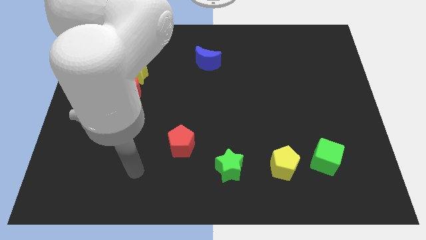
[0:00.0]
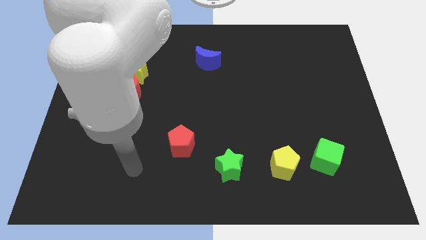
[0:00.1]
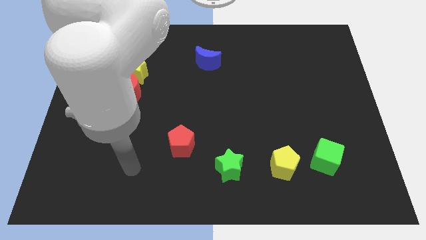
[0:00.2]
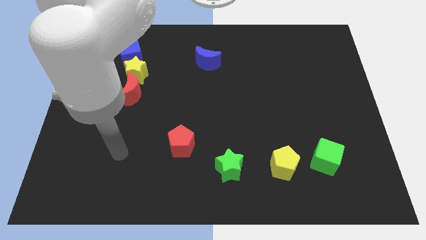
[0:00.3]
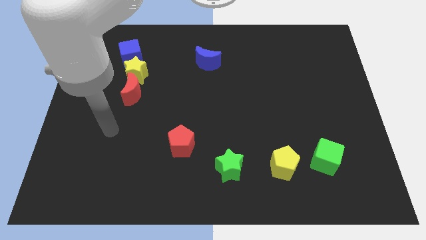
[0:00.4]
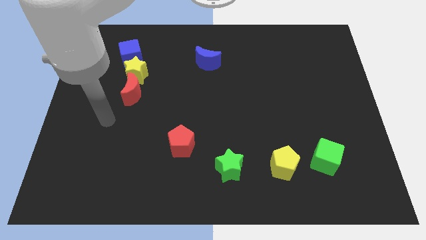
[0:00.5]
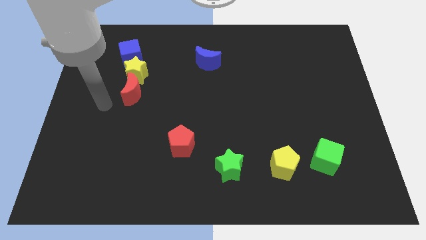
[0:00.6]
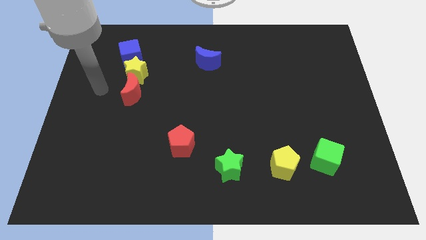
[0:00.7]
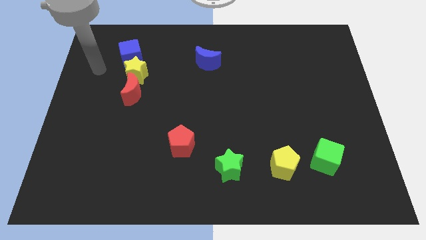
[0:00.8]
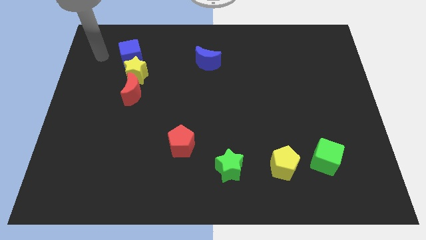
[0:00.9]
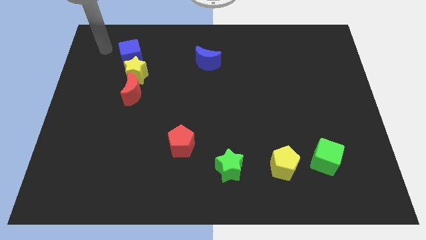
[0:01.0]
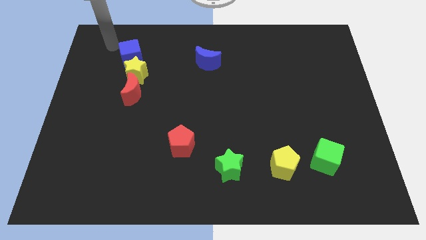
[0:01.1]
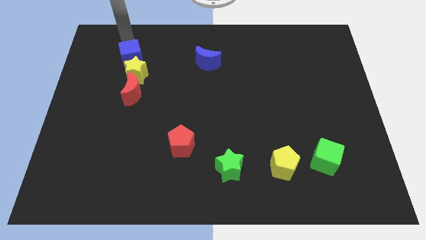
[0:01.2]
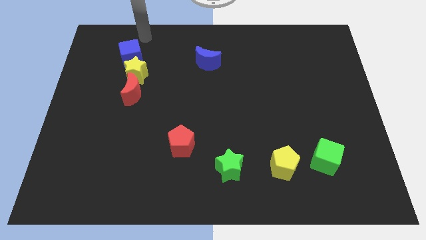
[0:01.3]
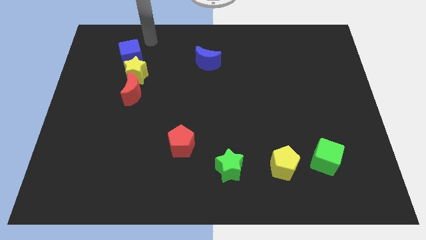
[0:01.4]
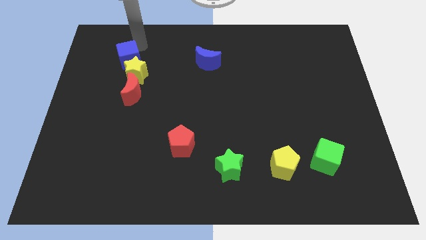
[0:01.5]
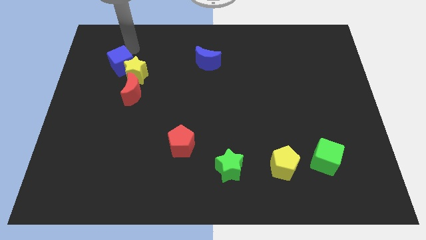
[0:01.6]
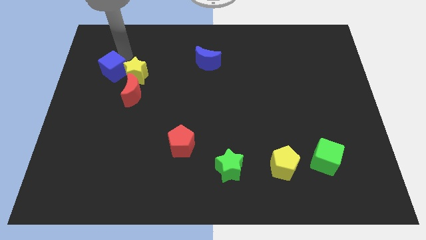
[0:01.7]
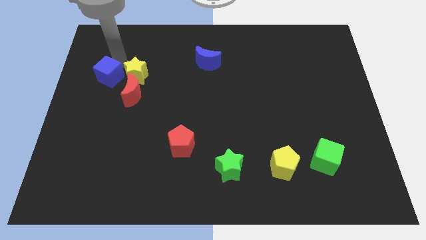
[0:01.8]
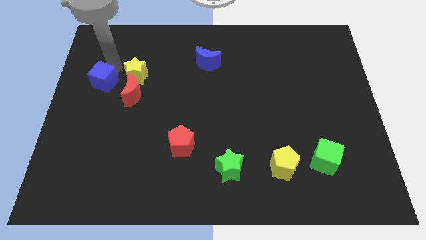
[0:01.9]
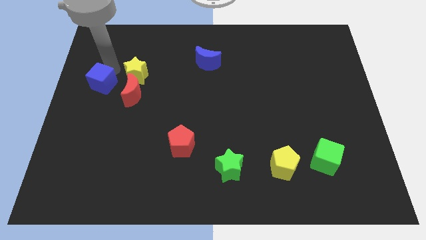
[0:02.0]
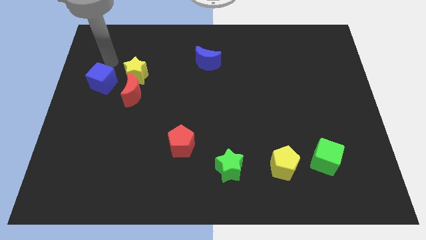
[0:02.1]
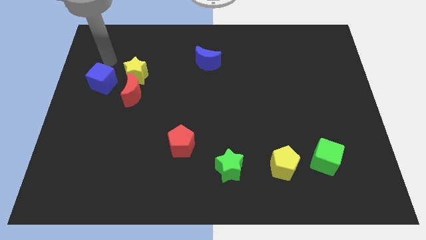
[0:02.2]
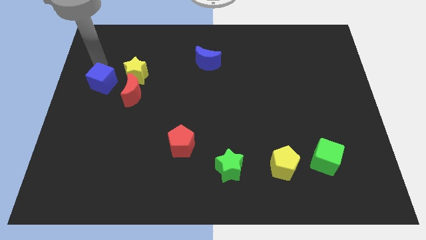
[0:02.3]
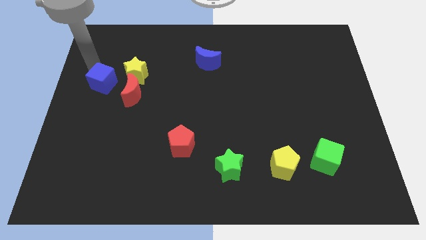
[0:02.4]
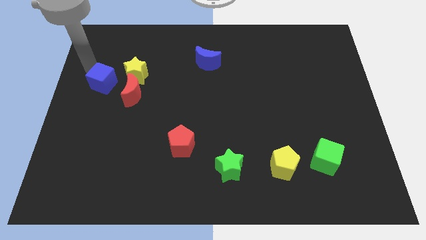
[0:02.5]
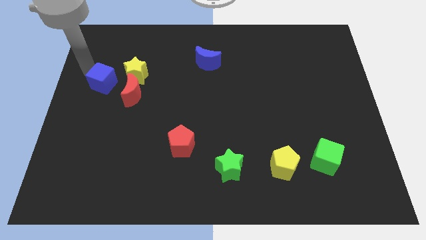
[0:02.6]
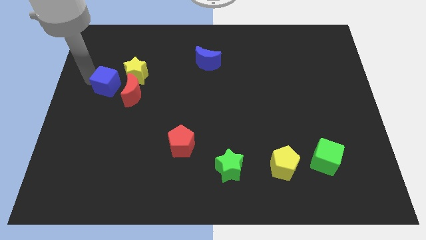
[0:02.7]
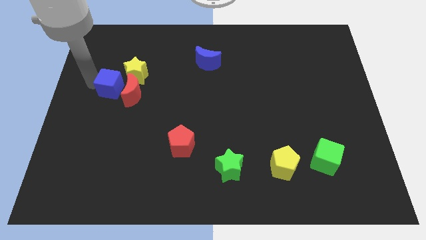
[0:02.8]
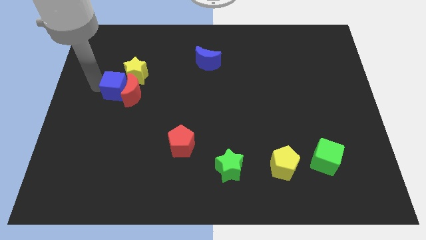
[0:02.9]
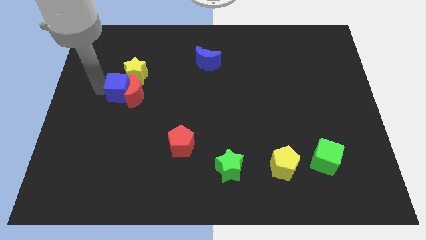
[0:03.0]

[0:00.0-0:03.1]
push the blue cube next to the red moon

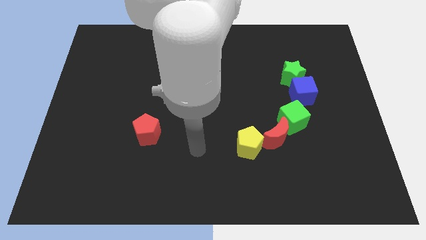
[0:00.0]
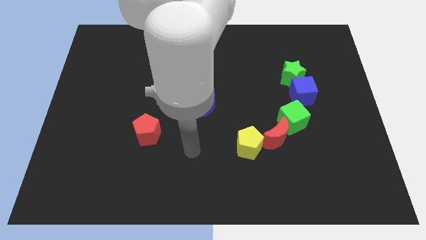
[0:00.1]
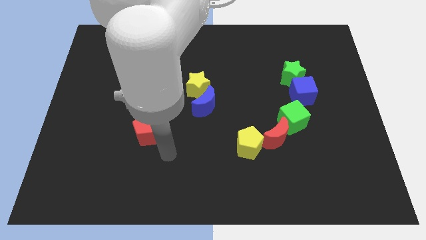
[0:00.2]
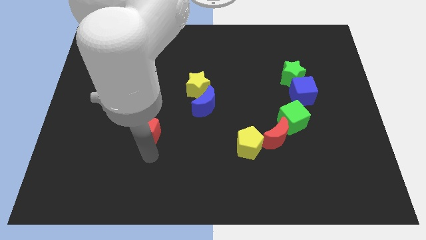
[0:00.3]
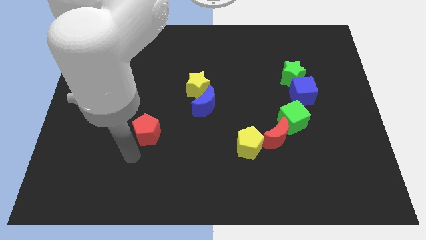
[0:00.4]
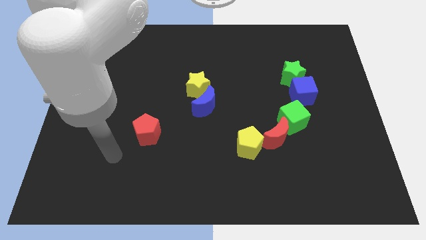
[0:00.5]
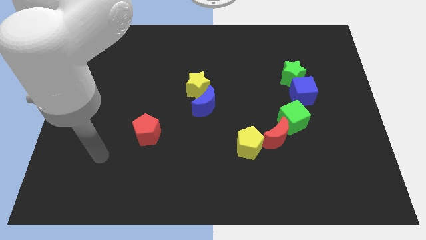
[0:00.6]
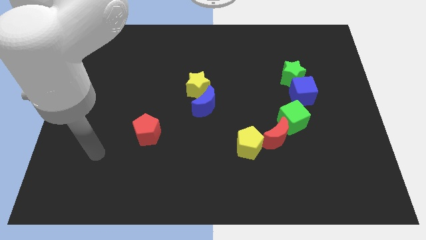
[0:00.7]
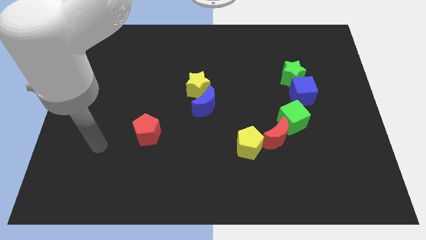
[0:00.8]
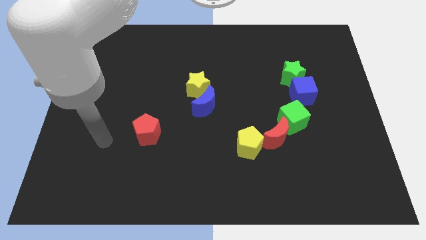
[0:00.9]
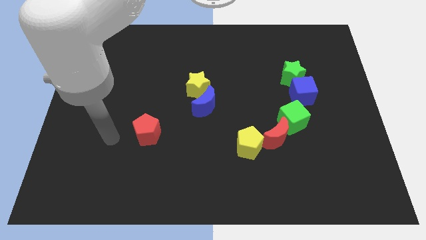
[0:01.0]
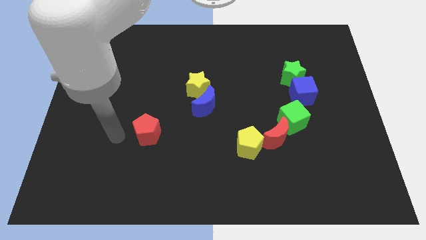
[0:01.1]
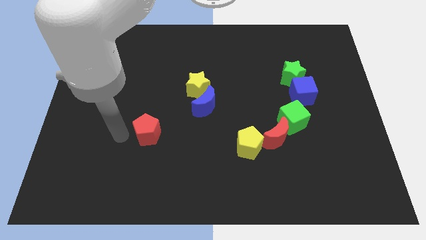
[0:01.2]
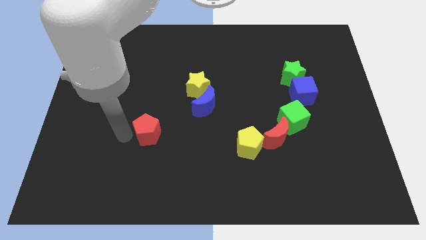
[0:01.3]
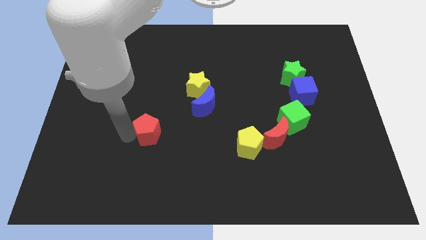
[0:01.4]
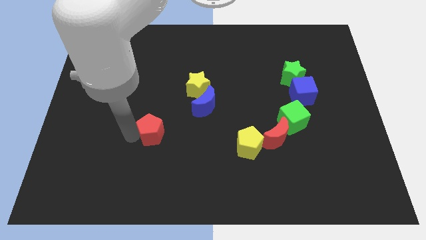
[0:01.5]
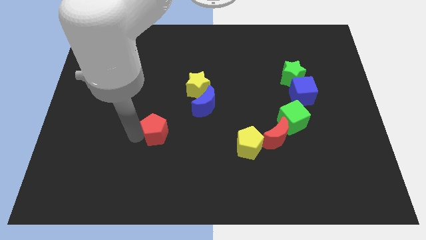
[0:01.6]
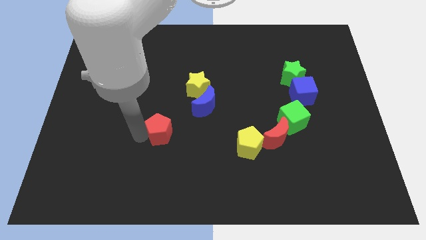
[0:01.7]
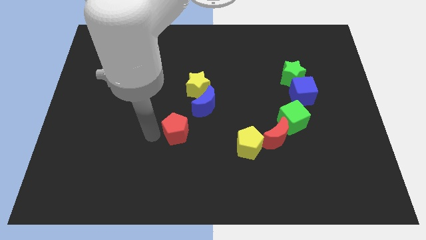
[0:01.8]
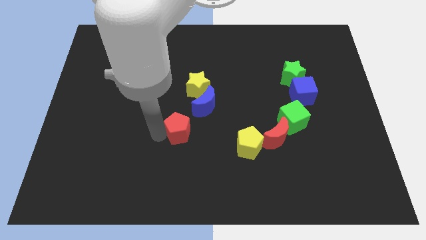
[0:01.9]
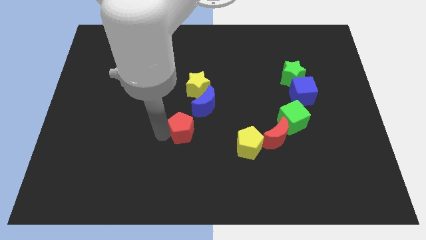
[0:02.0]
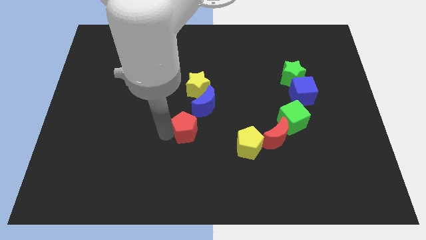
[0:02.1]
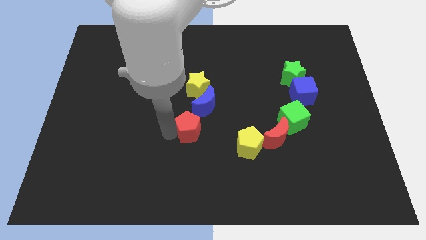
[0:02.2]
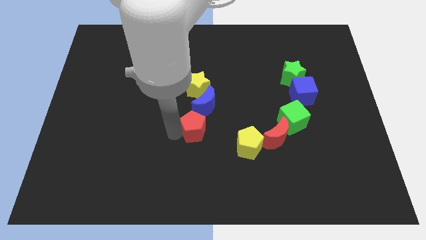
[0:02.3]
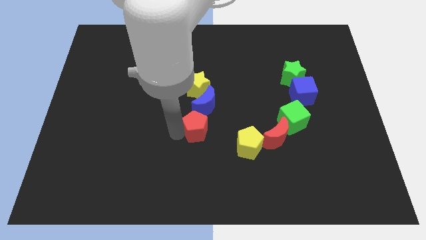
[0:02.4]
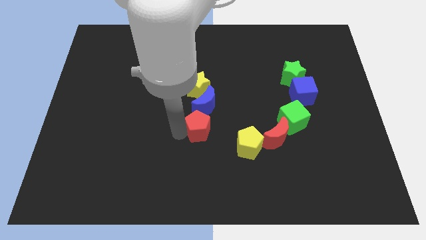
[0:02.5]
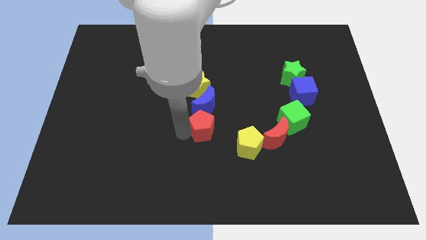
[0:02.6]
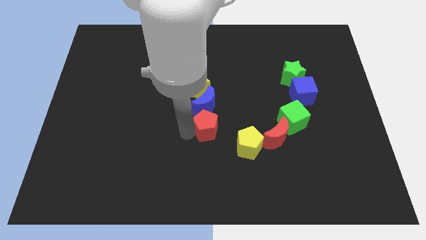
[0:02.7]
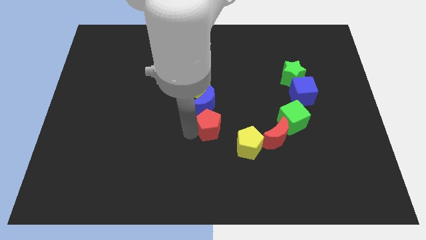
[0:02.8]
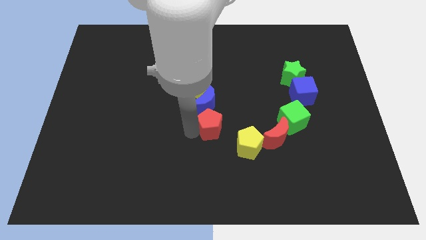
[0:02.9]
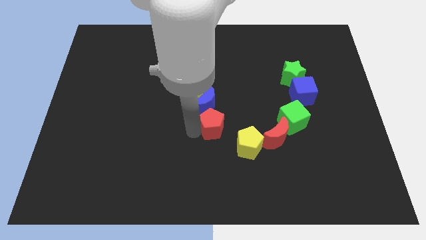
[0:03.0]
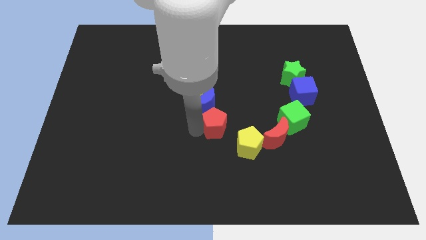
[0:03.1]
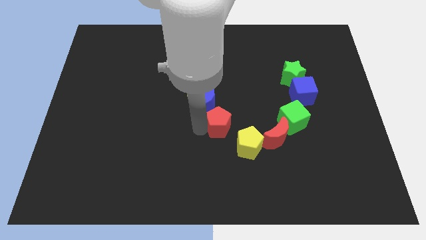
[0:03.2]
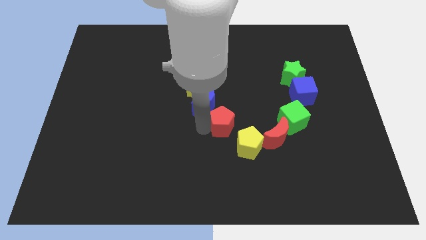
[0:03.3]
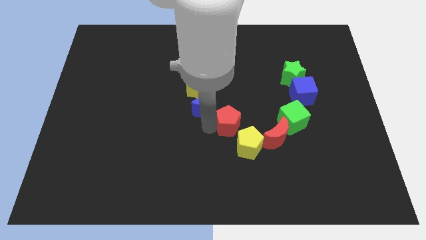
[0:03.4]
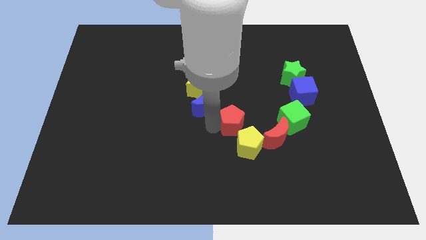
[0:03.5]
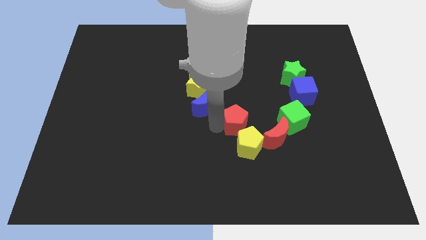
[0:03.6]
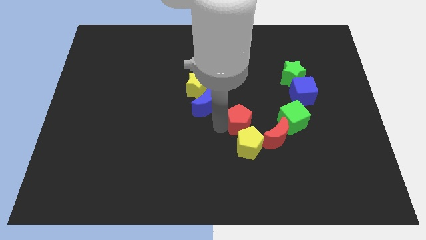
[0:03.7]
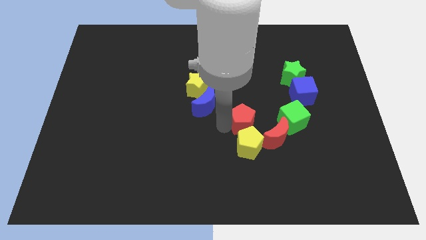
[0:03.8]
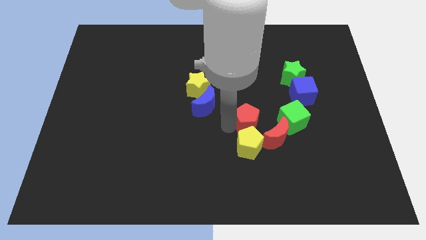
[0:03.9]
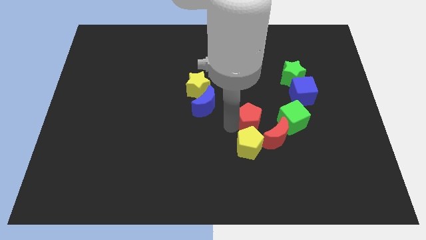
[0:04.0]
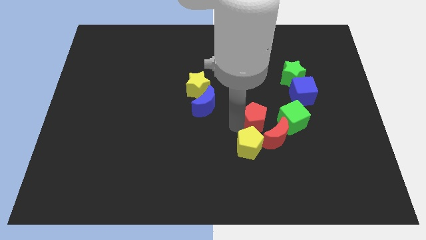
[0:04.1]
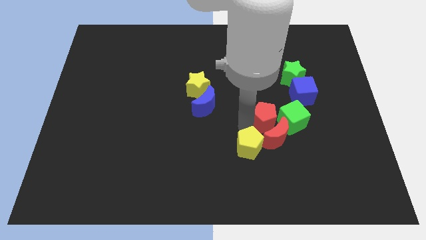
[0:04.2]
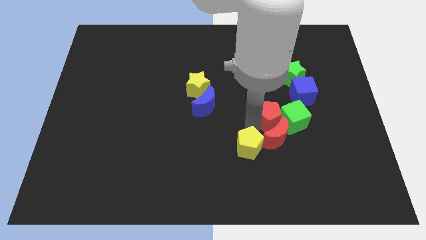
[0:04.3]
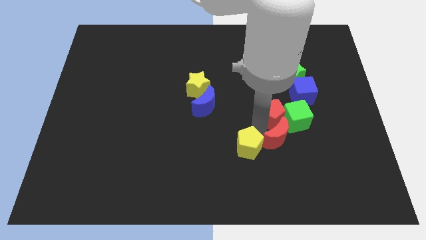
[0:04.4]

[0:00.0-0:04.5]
slide the red pentagon to the red moon

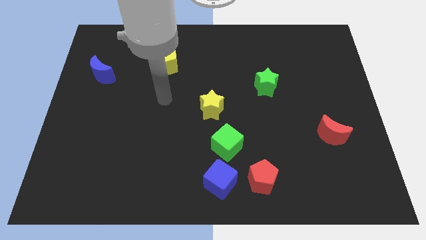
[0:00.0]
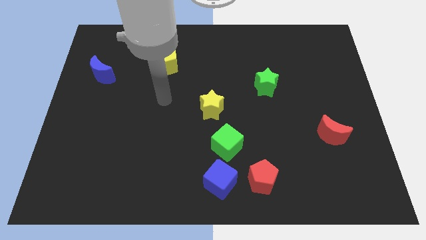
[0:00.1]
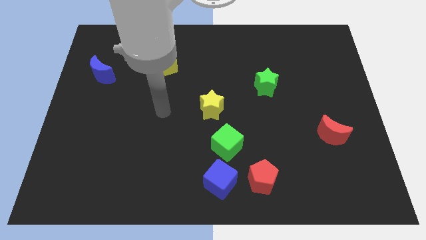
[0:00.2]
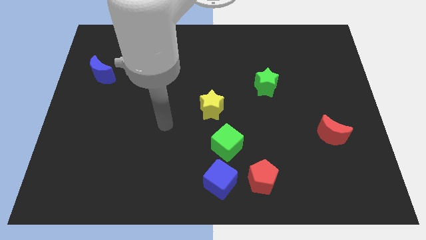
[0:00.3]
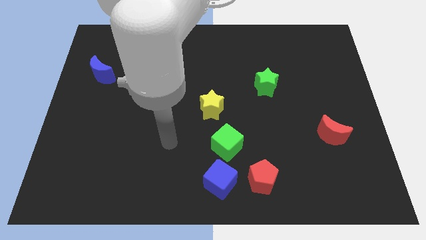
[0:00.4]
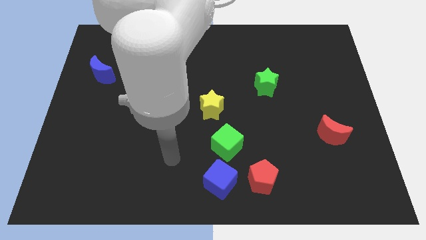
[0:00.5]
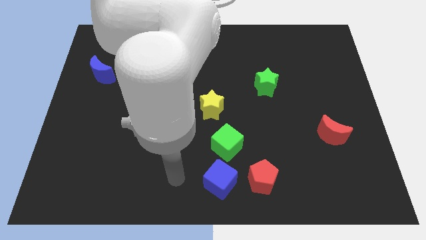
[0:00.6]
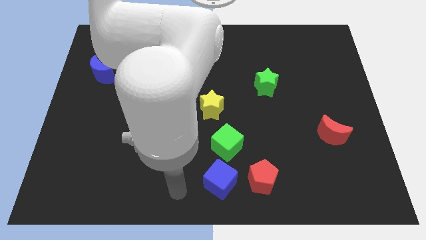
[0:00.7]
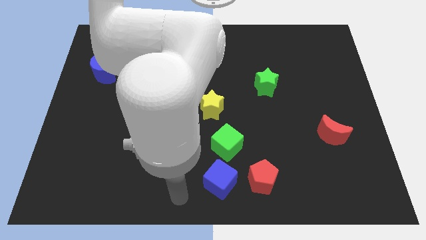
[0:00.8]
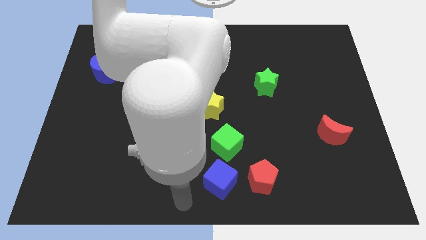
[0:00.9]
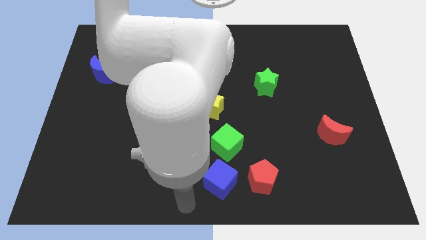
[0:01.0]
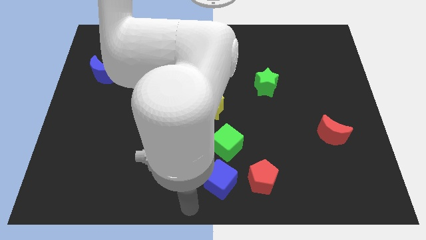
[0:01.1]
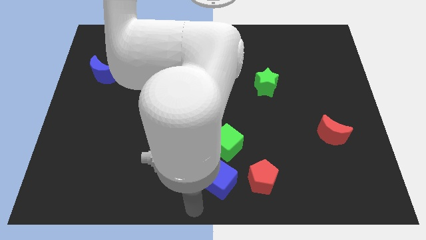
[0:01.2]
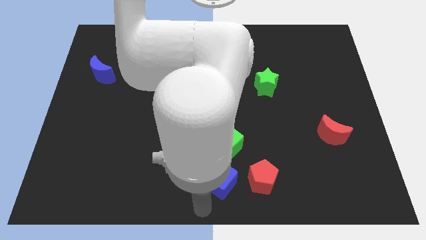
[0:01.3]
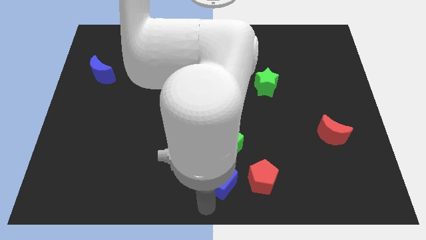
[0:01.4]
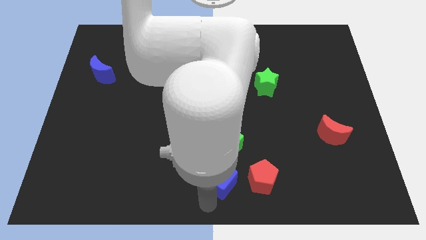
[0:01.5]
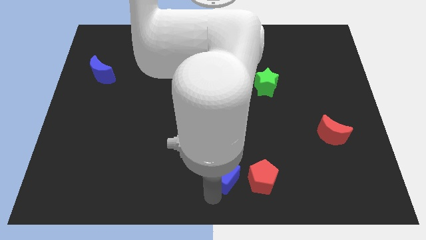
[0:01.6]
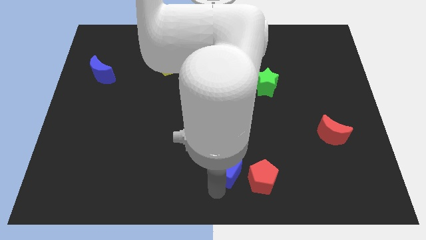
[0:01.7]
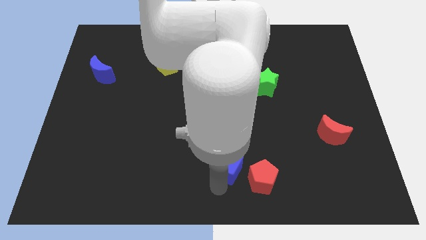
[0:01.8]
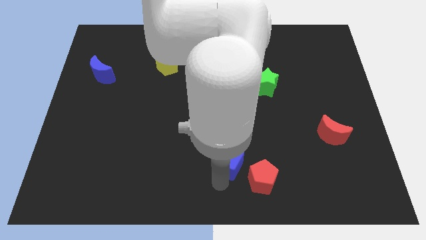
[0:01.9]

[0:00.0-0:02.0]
put the blue cube next to the green cube
